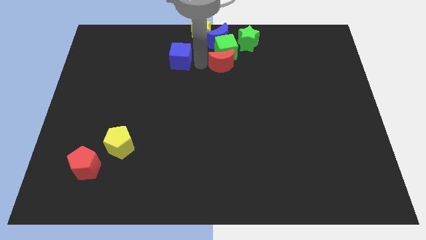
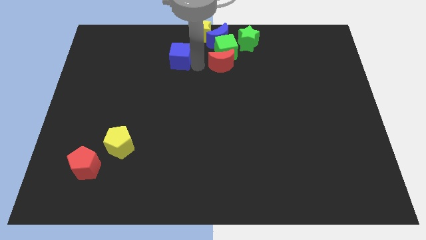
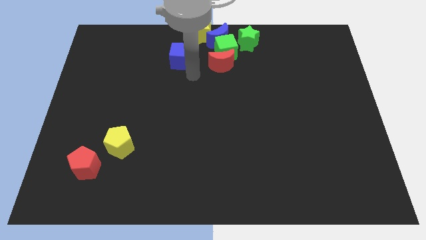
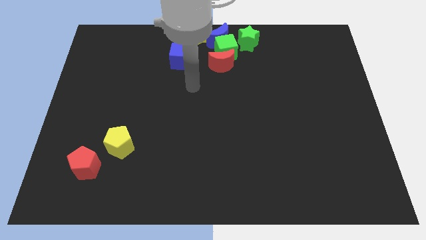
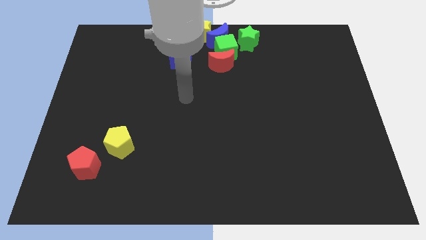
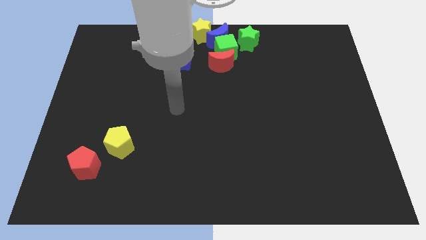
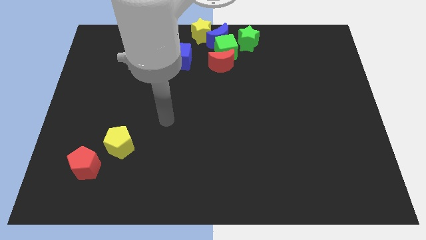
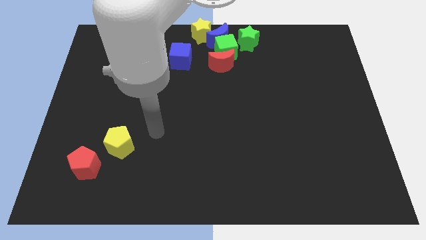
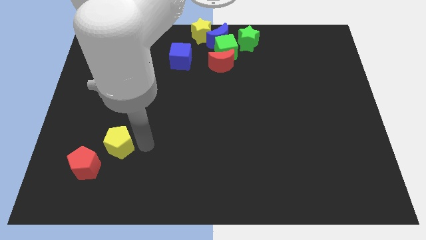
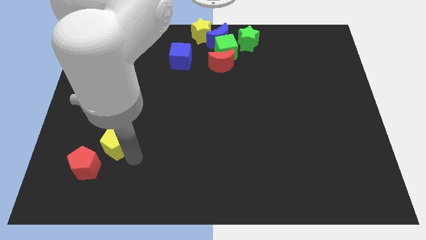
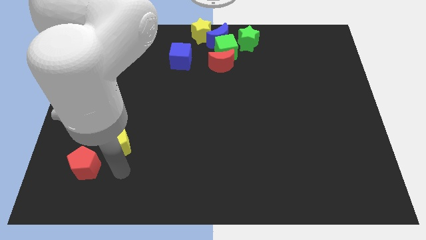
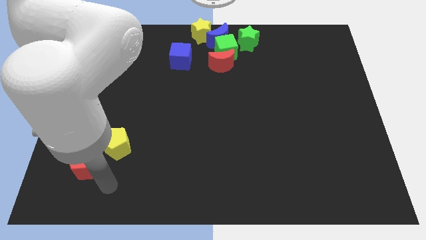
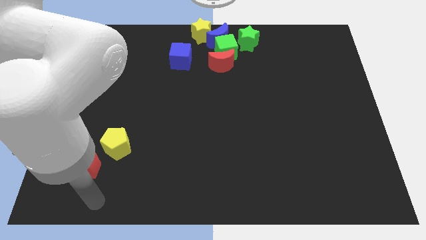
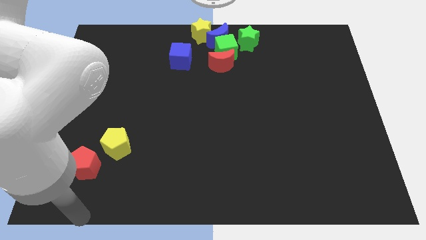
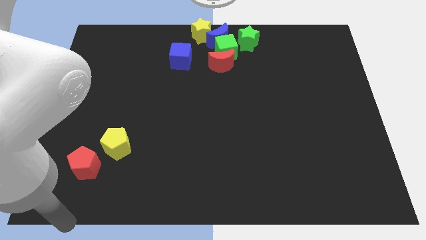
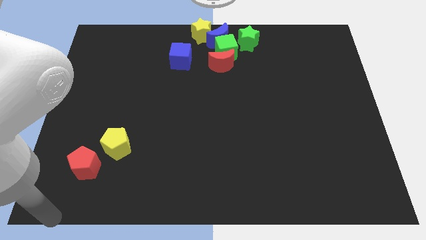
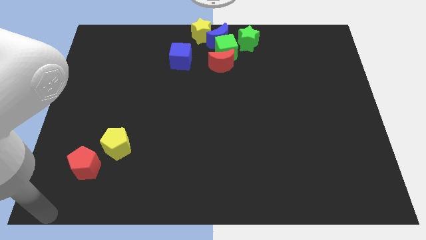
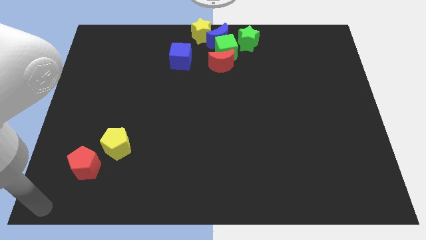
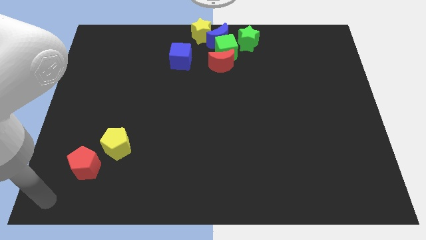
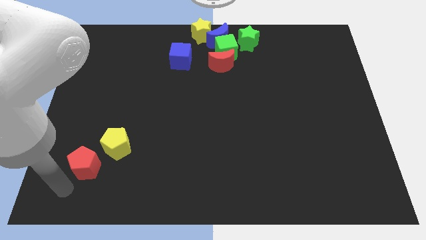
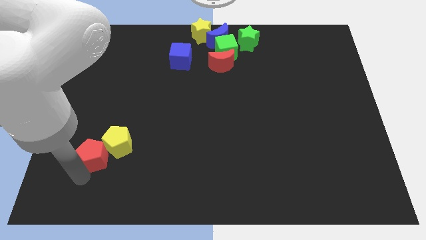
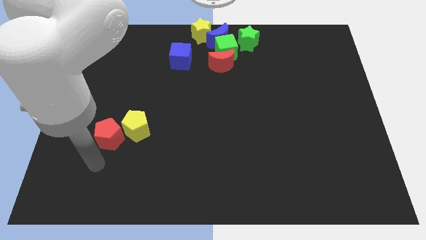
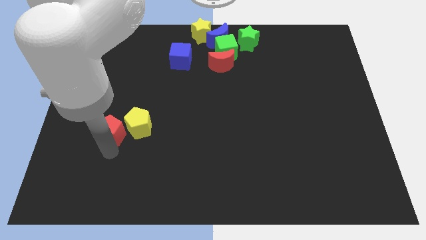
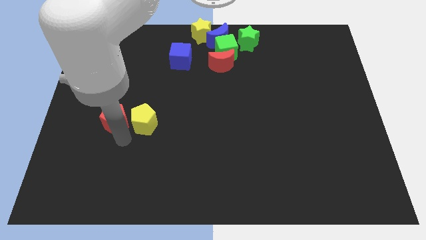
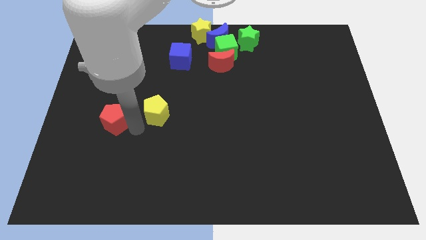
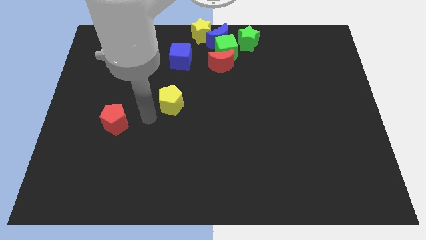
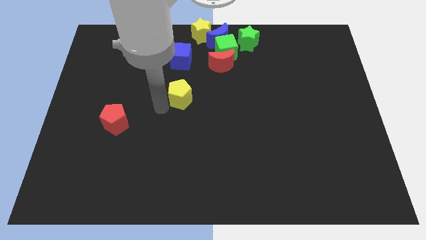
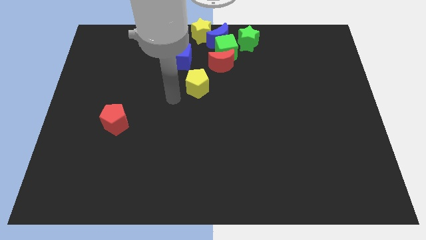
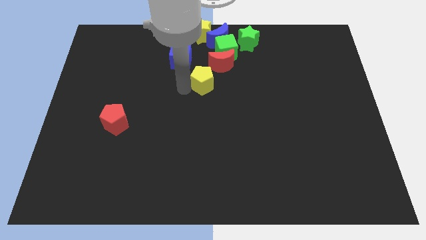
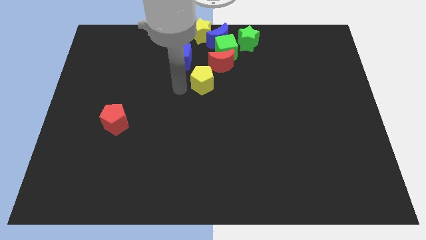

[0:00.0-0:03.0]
place the yellow pentagon under the red moon and blue cube

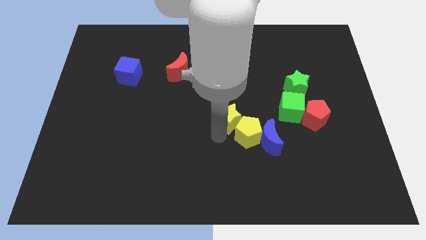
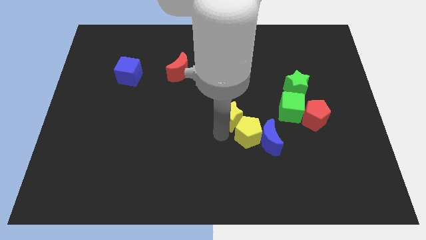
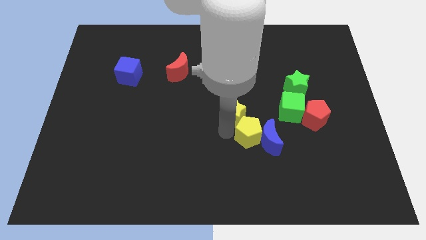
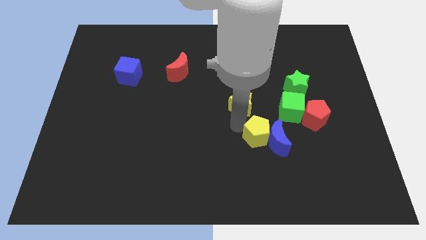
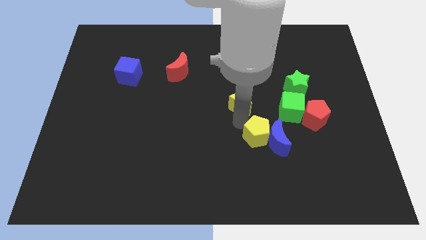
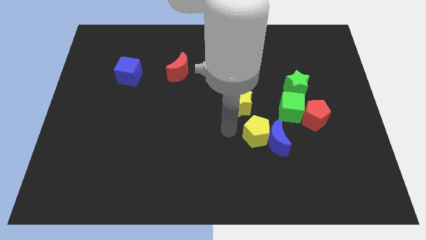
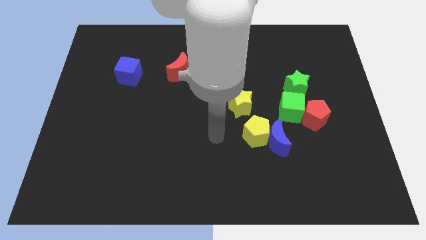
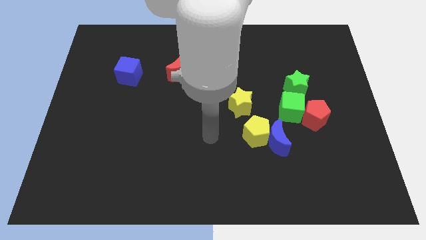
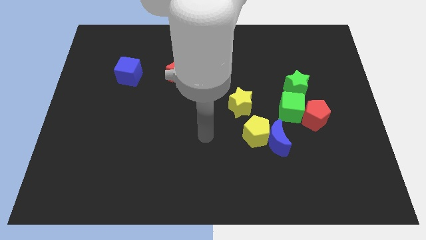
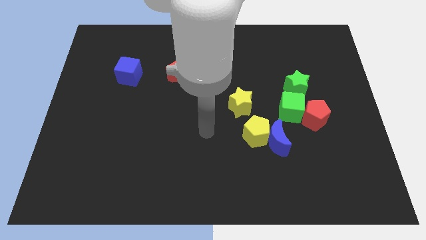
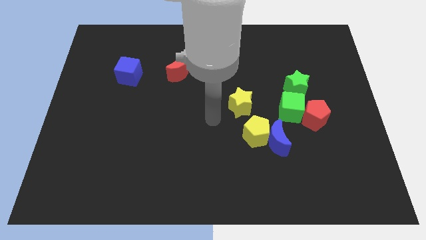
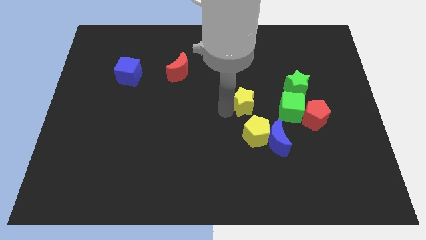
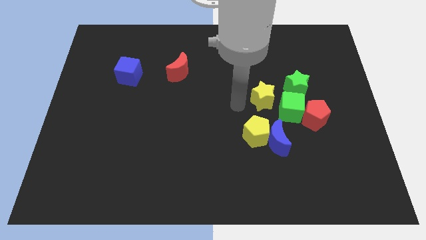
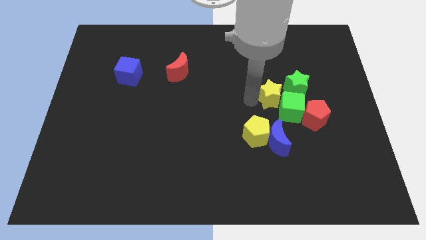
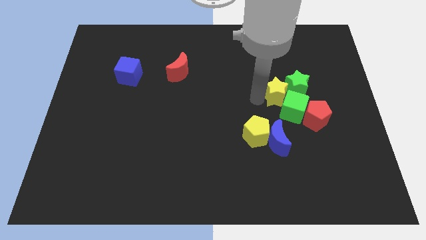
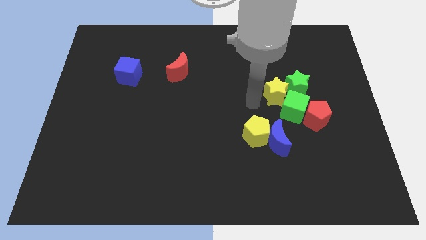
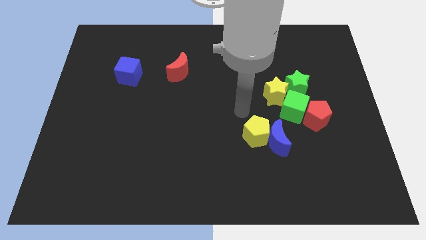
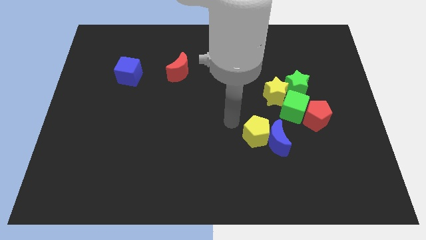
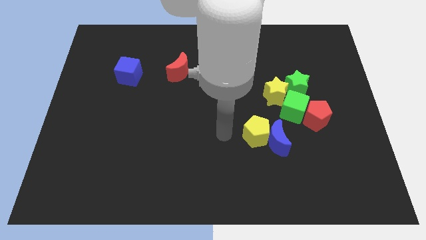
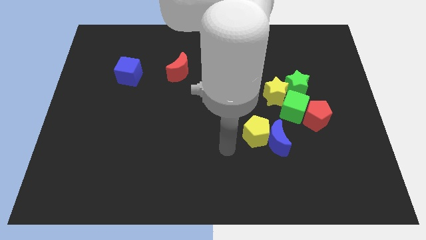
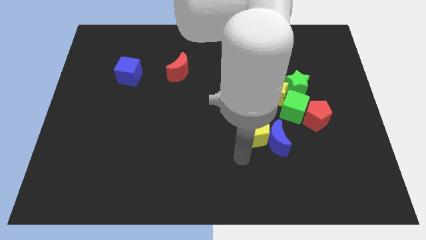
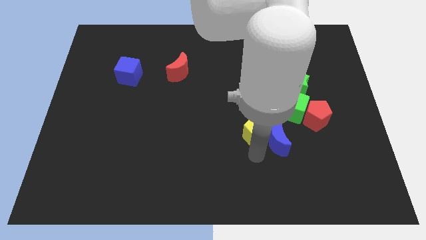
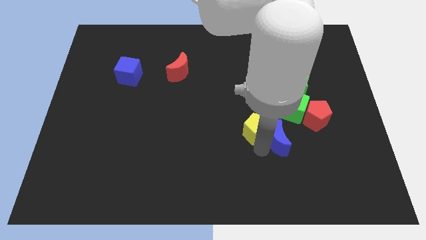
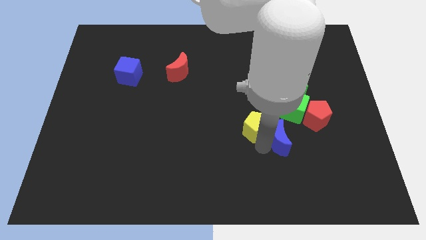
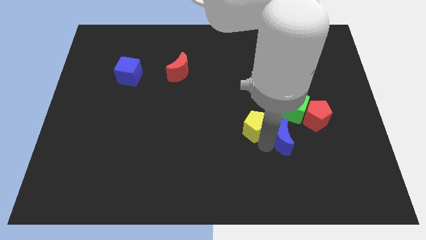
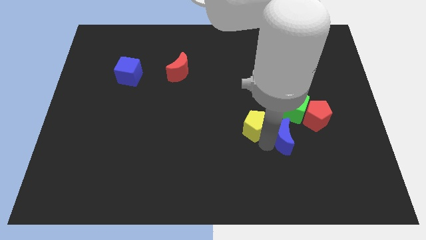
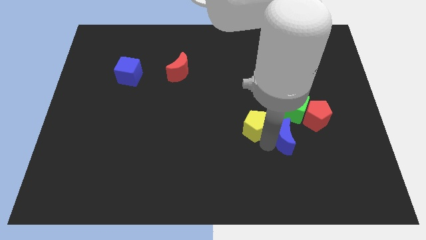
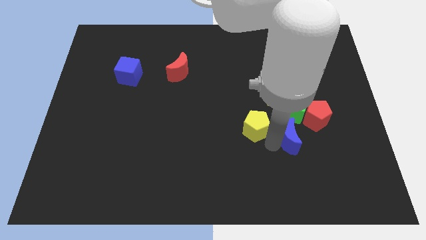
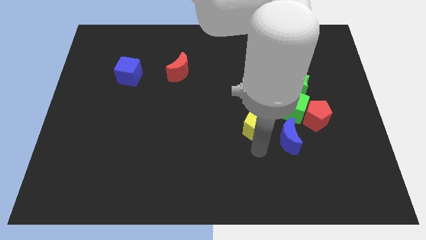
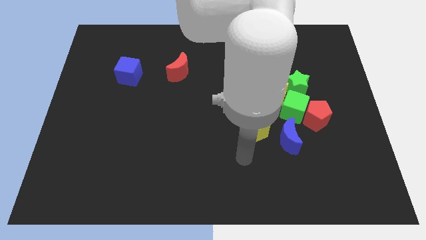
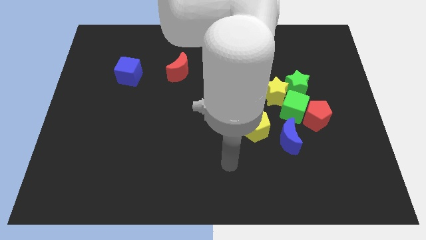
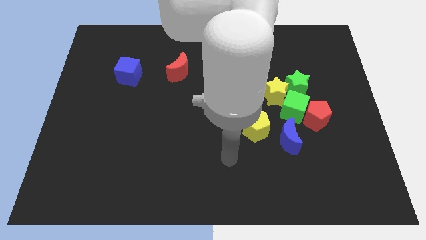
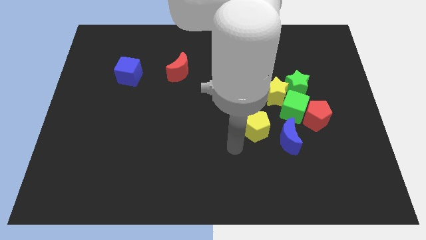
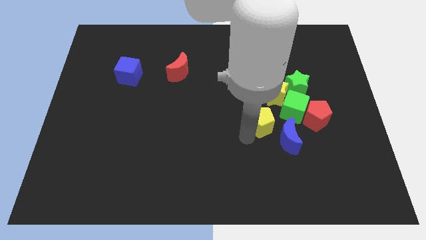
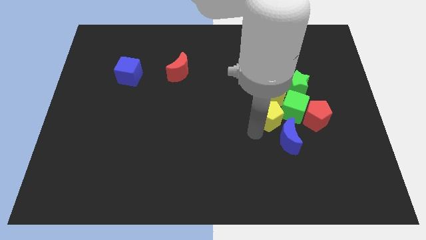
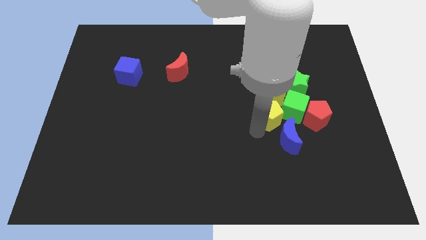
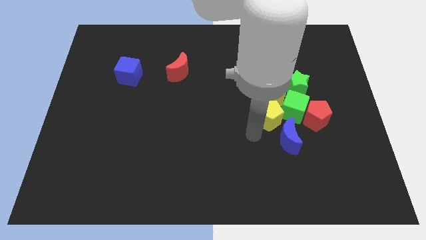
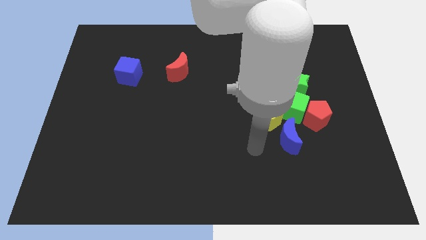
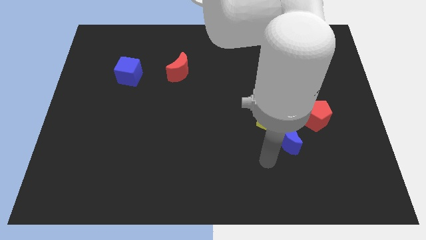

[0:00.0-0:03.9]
slide the yellow star and the yellow pentagon into the group of blocks

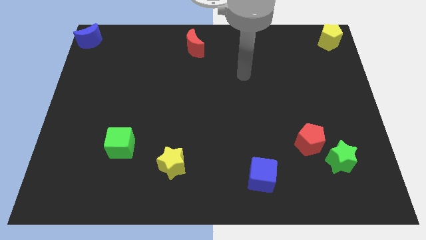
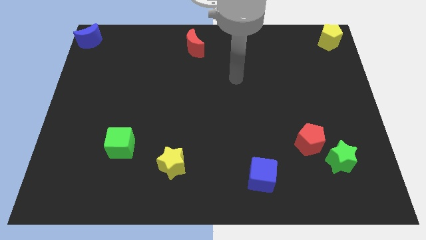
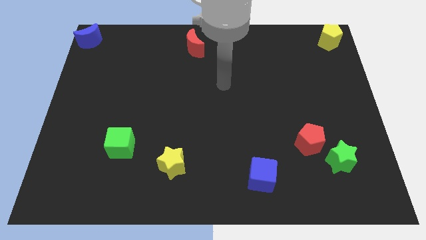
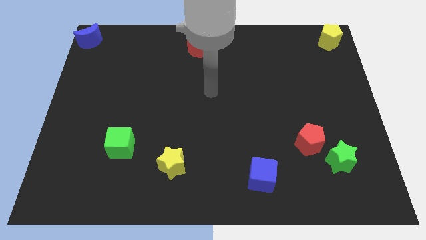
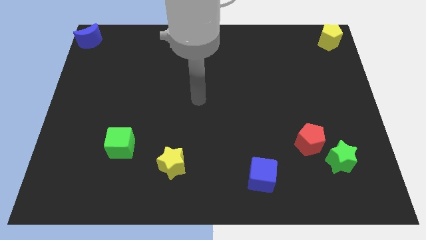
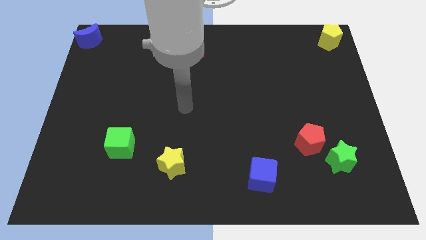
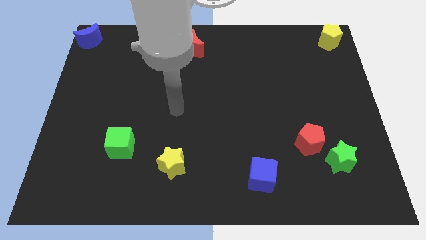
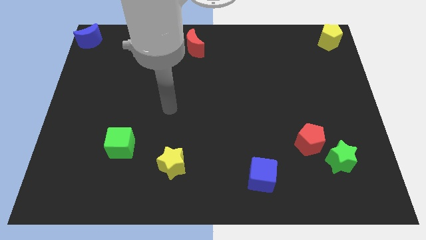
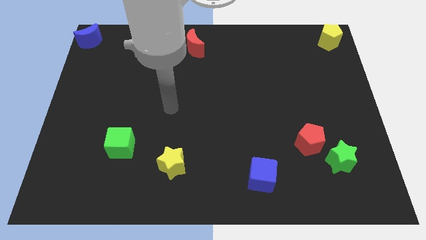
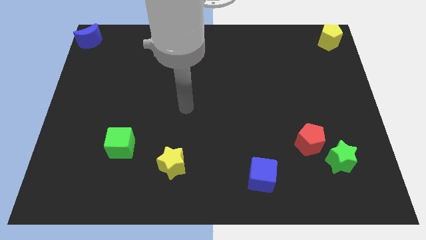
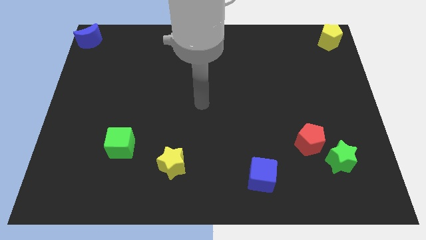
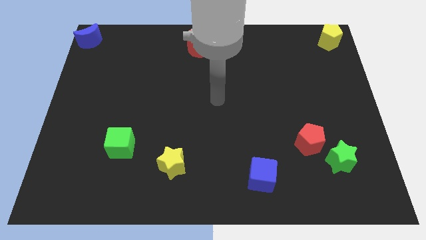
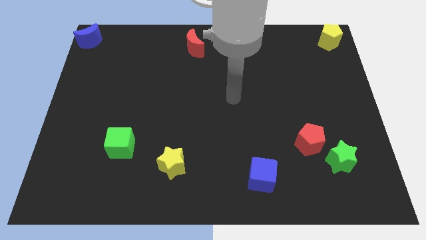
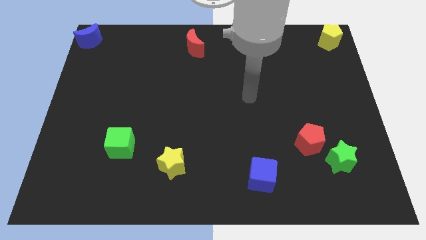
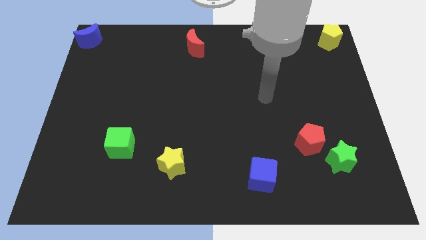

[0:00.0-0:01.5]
place your arm in between the red moon and red pentagon

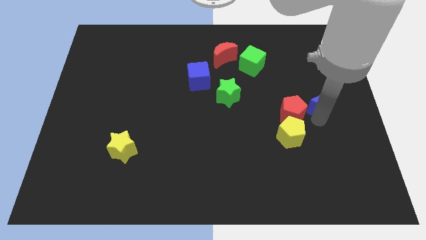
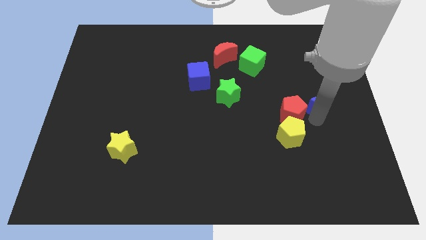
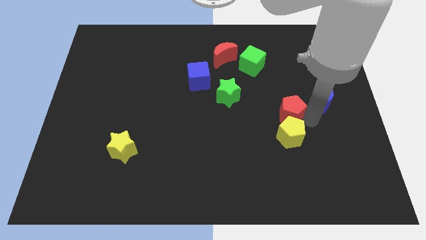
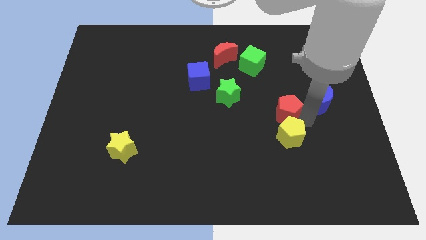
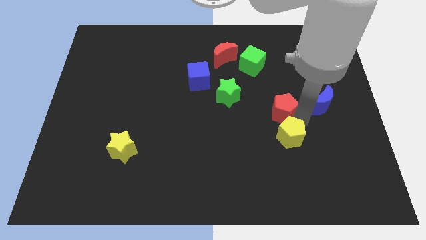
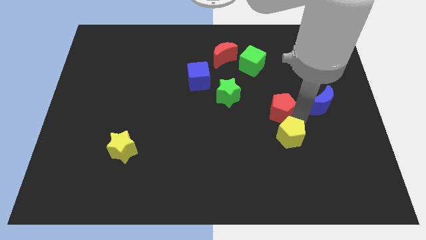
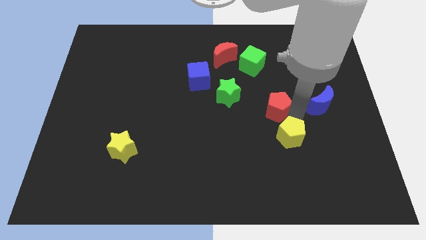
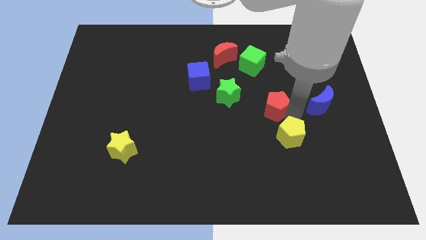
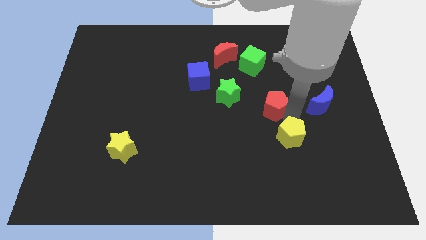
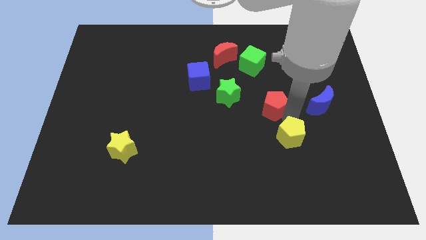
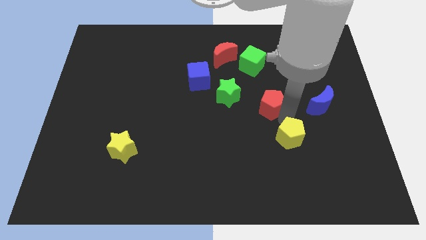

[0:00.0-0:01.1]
separate the red pentagon from the yellow pentagon
